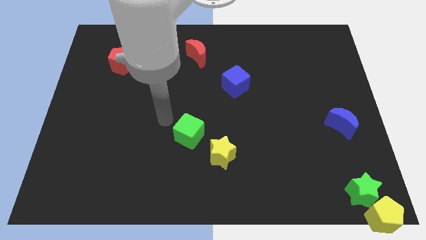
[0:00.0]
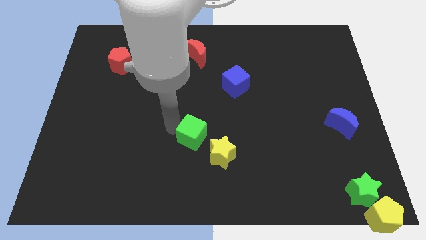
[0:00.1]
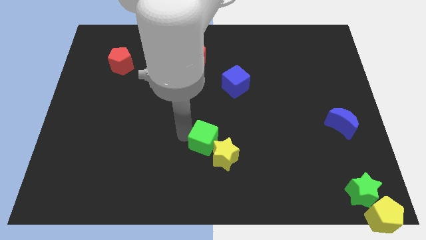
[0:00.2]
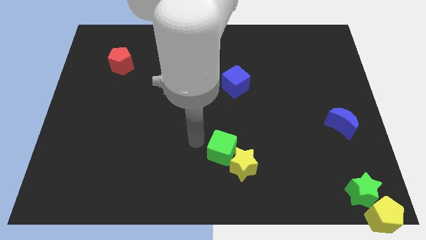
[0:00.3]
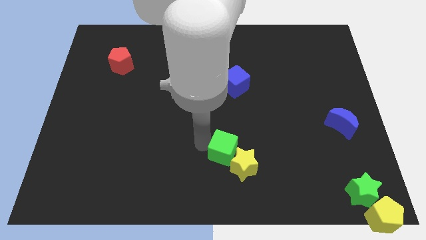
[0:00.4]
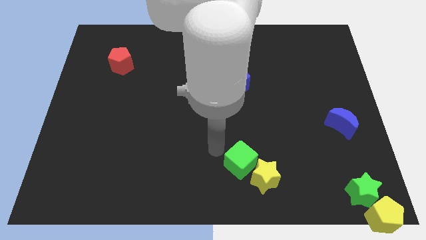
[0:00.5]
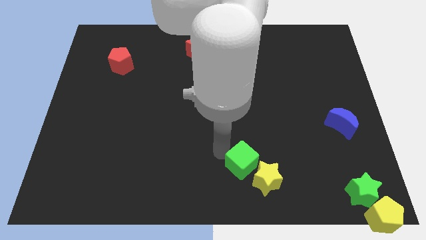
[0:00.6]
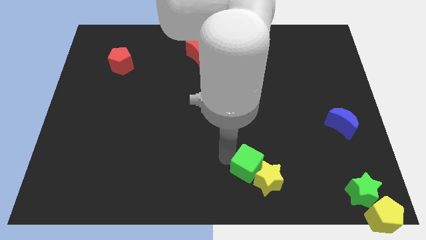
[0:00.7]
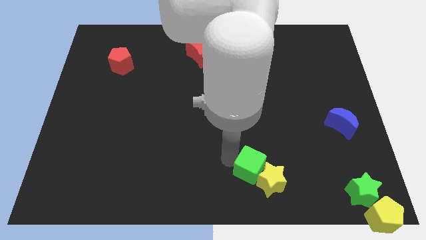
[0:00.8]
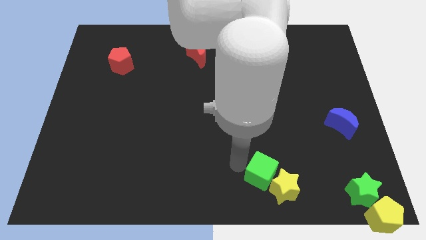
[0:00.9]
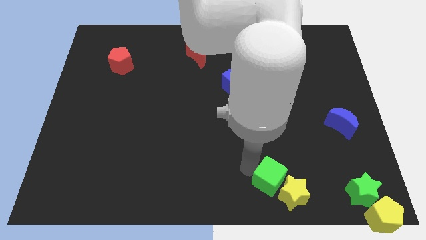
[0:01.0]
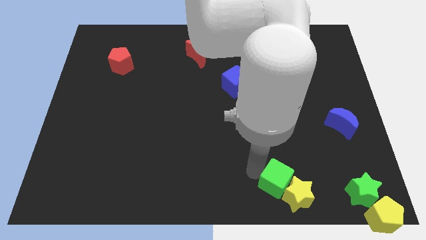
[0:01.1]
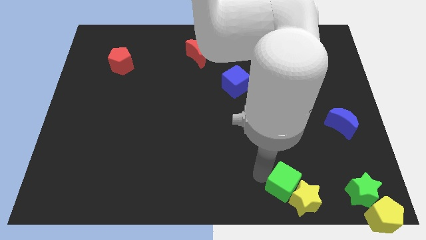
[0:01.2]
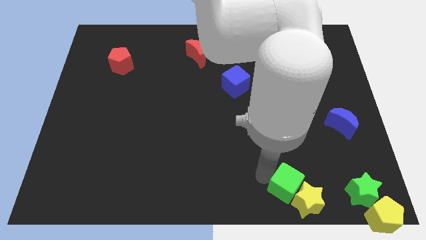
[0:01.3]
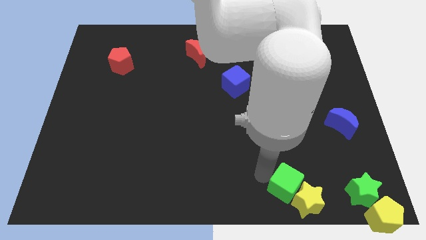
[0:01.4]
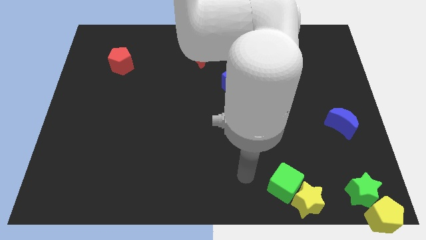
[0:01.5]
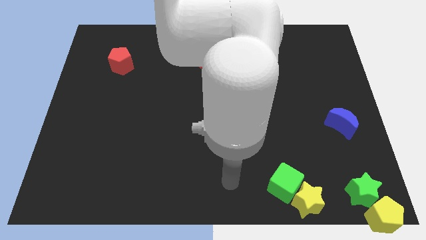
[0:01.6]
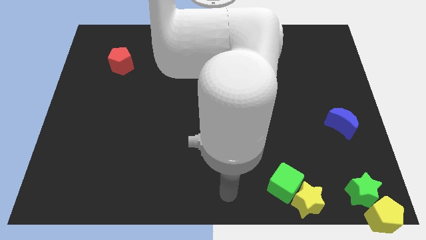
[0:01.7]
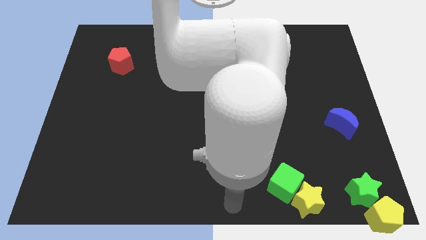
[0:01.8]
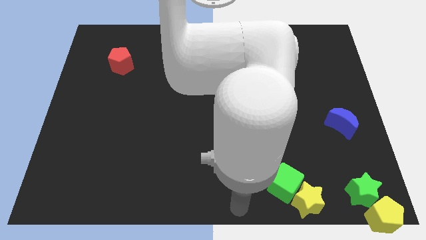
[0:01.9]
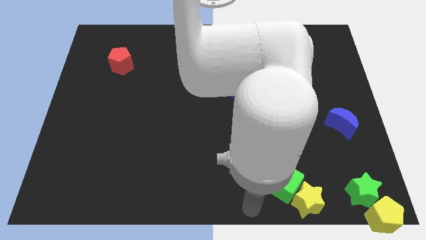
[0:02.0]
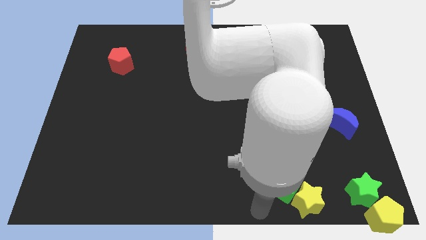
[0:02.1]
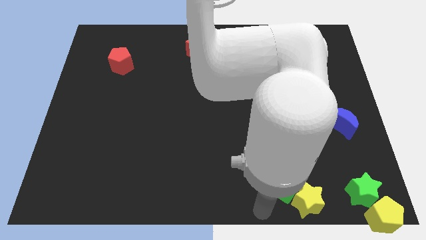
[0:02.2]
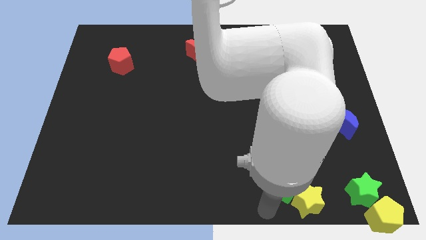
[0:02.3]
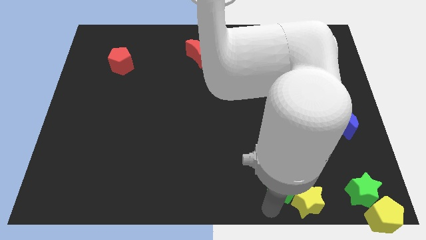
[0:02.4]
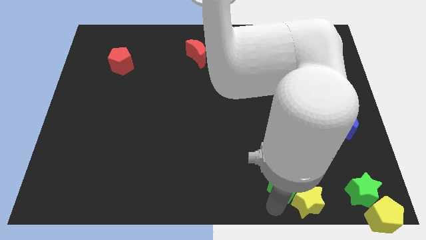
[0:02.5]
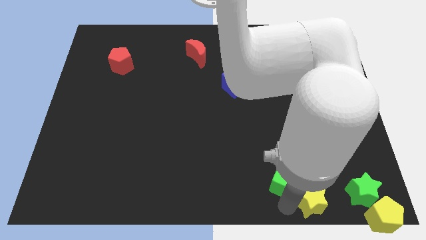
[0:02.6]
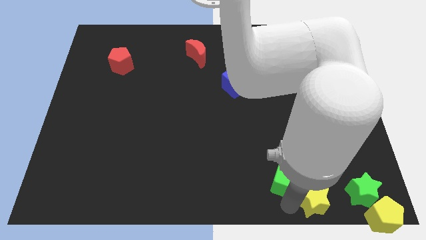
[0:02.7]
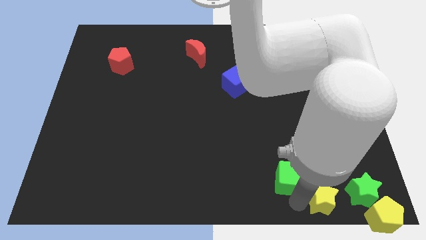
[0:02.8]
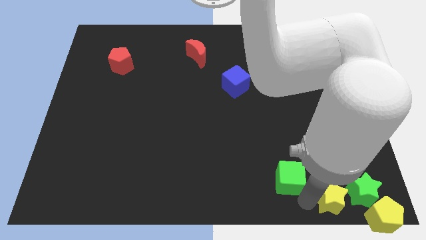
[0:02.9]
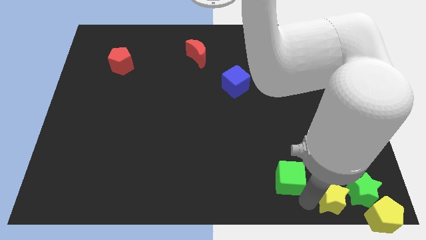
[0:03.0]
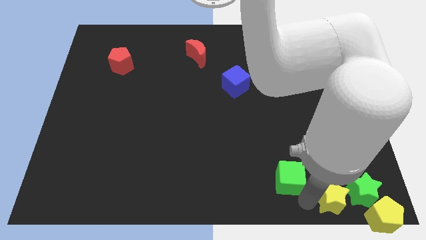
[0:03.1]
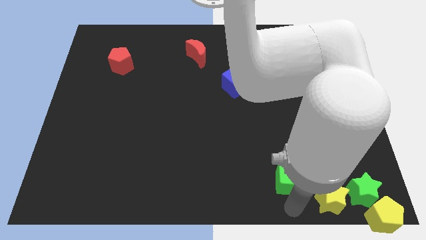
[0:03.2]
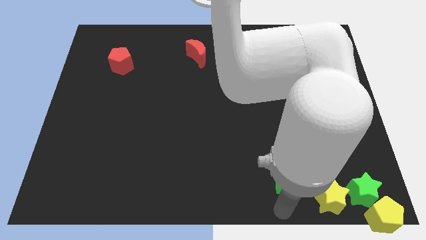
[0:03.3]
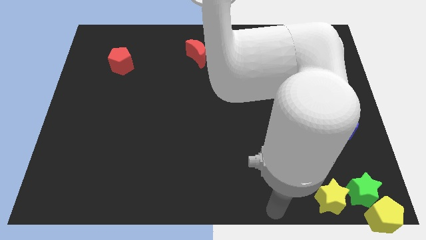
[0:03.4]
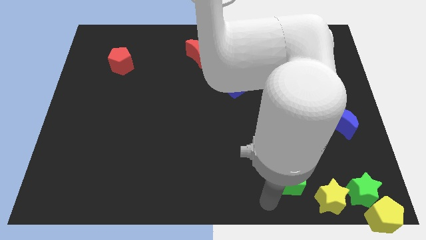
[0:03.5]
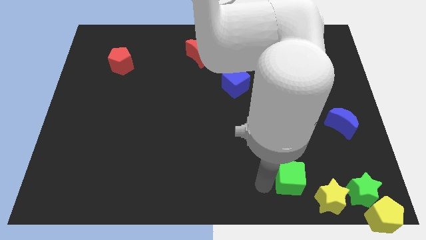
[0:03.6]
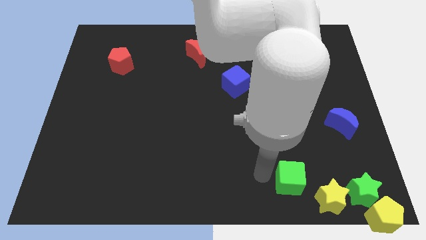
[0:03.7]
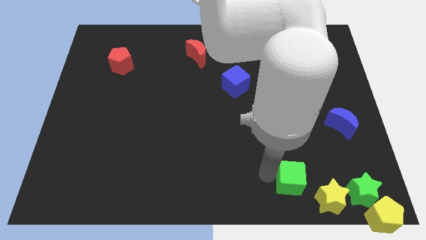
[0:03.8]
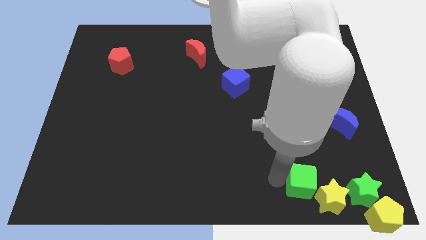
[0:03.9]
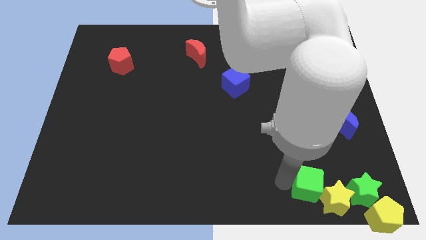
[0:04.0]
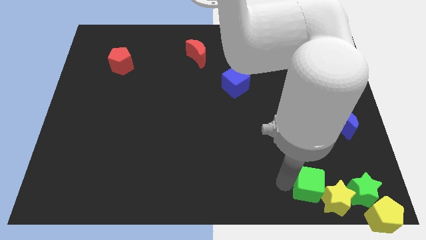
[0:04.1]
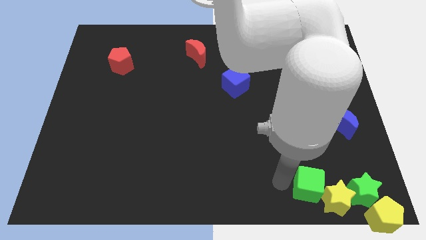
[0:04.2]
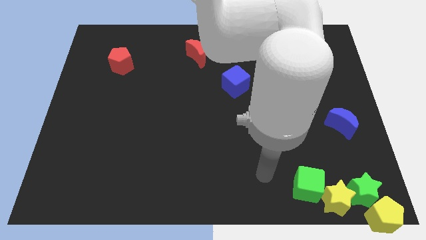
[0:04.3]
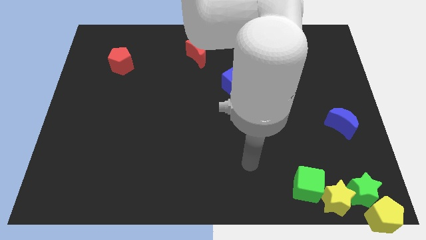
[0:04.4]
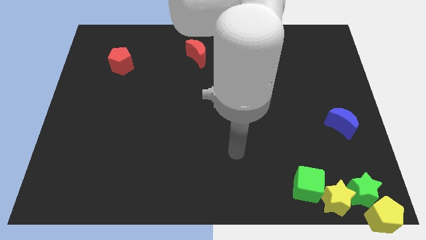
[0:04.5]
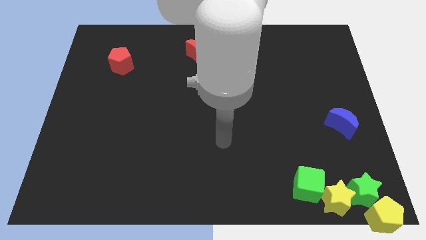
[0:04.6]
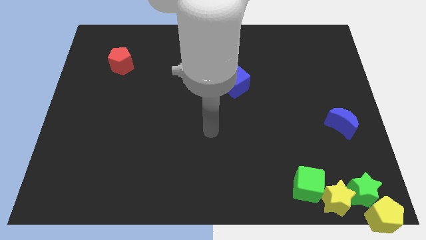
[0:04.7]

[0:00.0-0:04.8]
move green cube and yellow star towards bottom right corner of the board

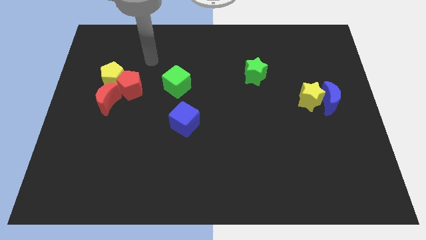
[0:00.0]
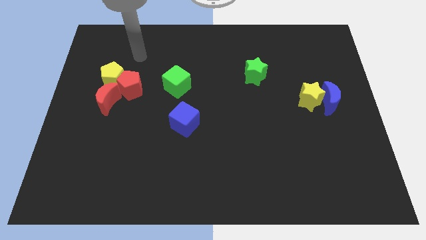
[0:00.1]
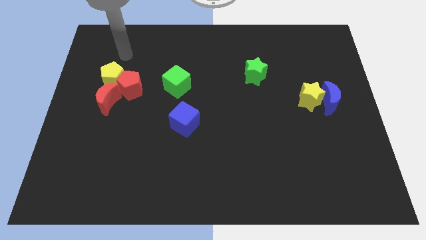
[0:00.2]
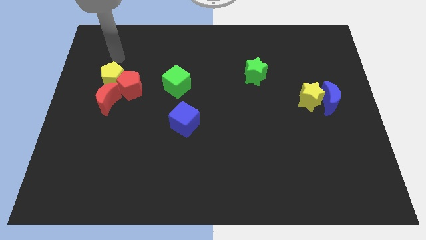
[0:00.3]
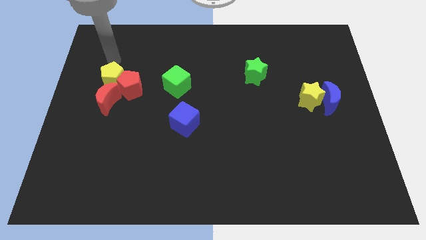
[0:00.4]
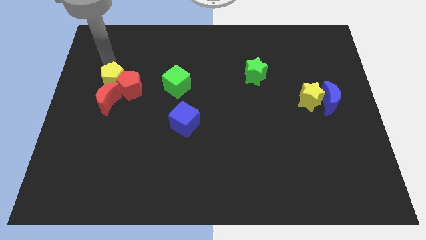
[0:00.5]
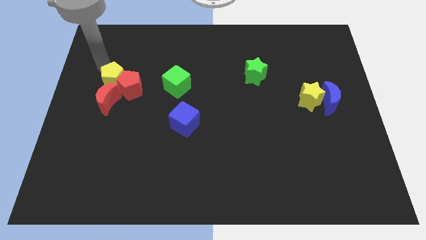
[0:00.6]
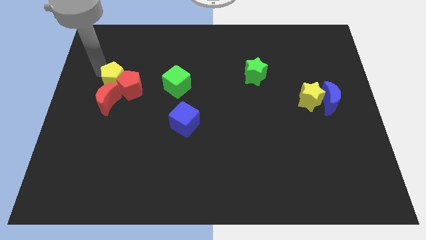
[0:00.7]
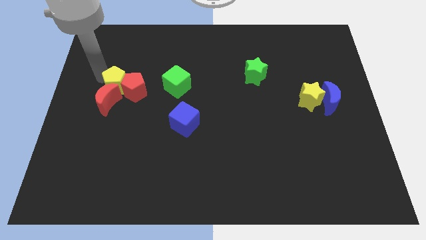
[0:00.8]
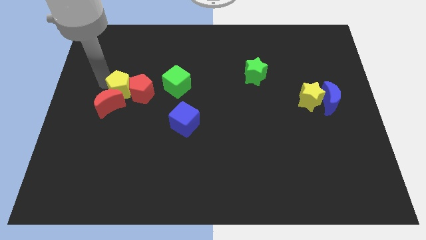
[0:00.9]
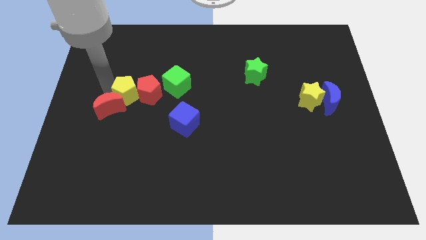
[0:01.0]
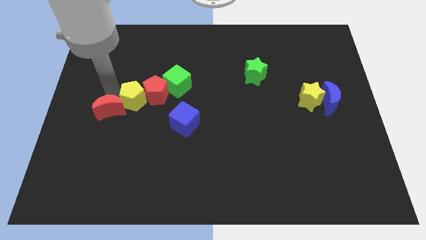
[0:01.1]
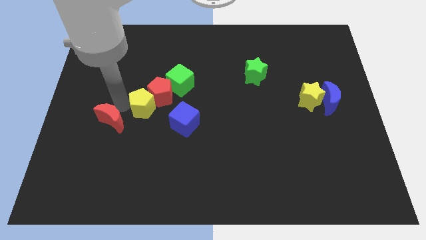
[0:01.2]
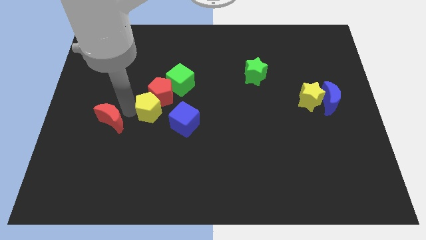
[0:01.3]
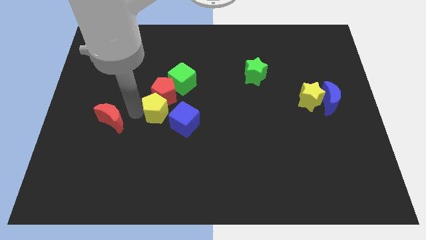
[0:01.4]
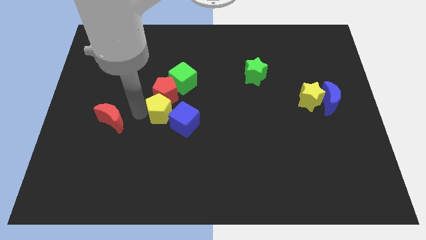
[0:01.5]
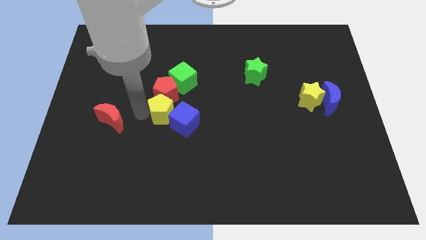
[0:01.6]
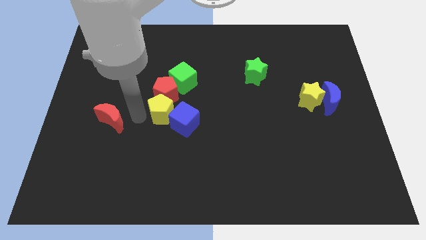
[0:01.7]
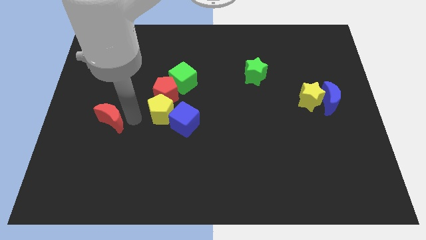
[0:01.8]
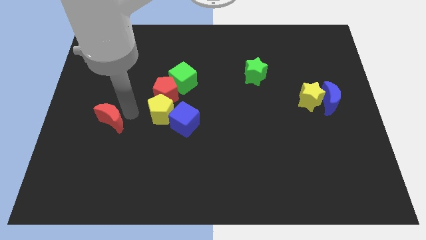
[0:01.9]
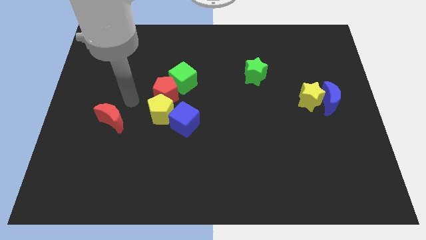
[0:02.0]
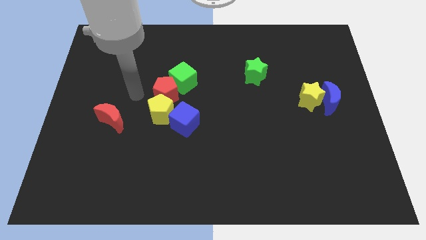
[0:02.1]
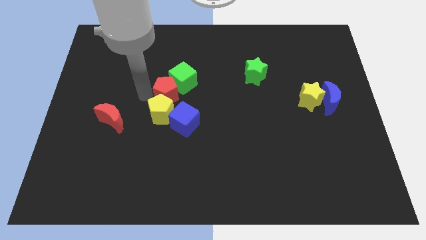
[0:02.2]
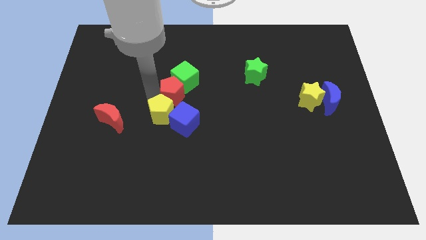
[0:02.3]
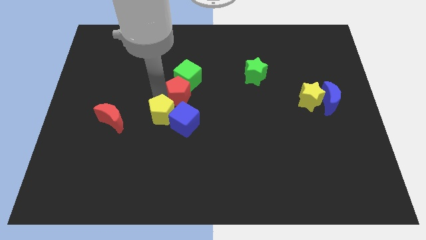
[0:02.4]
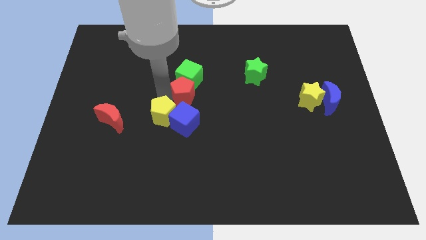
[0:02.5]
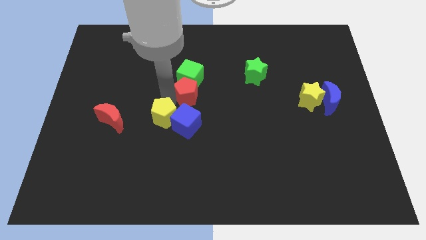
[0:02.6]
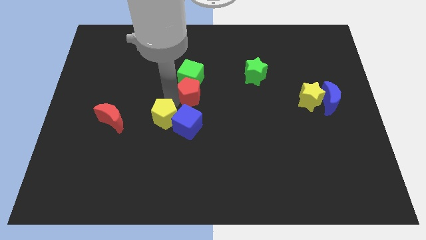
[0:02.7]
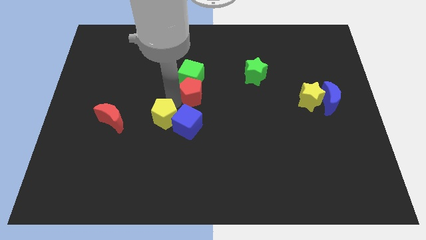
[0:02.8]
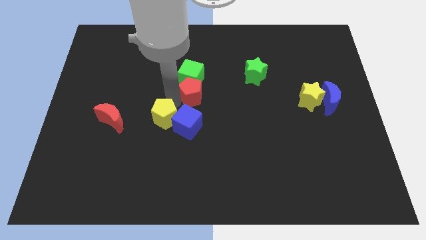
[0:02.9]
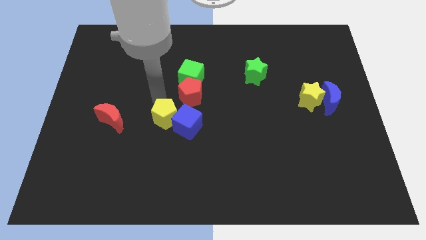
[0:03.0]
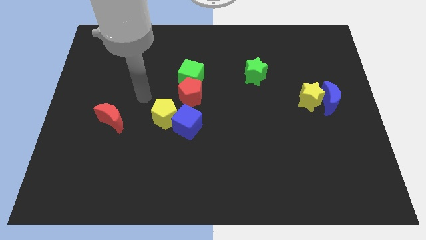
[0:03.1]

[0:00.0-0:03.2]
move the yellow pentagon to the top left to the blue cube

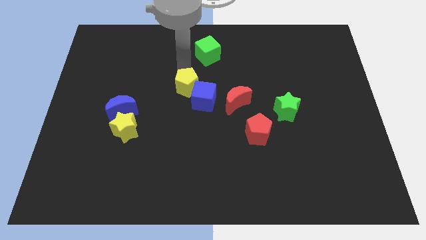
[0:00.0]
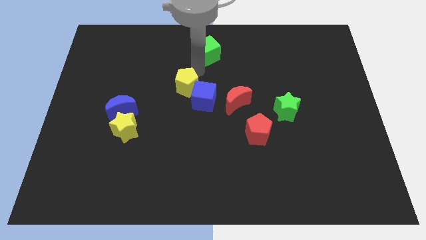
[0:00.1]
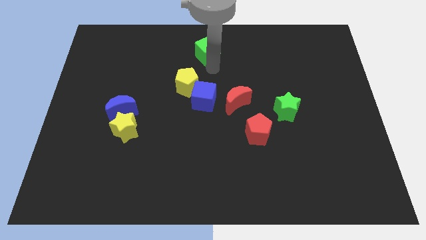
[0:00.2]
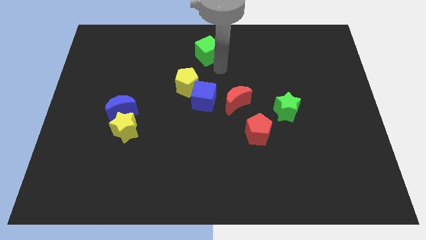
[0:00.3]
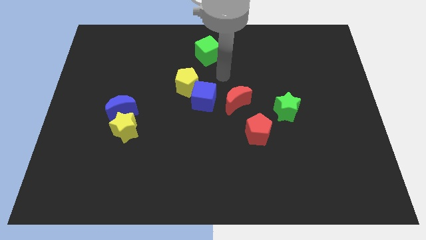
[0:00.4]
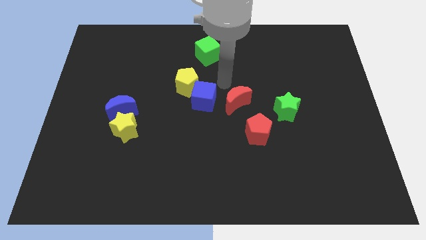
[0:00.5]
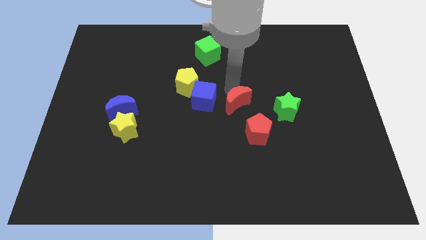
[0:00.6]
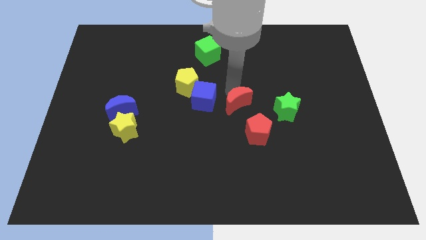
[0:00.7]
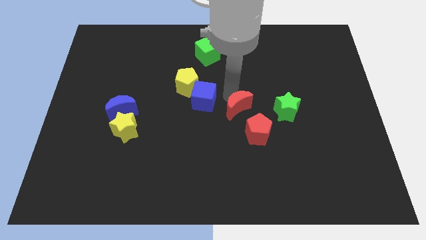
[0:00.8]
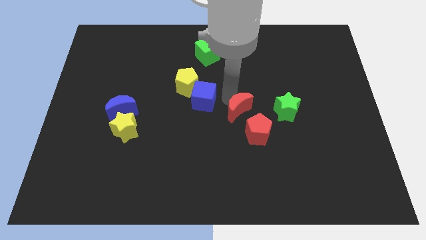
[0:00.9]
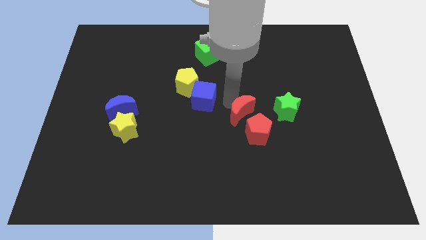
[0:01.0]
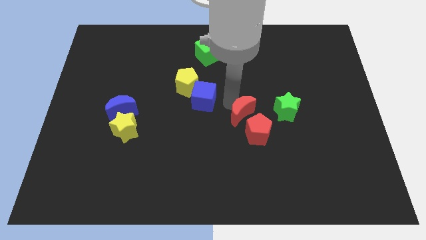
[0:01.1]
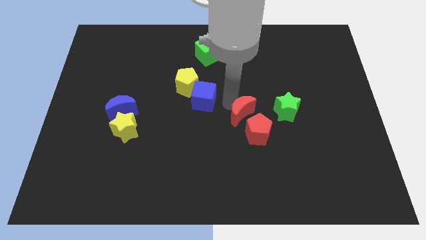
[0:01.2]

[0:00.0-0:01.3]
slide the red moon towards the red pentagon
